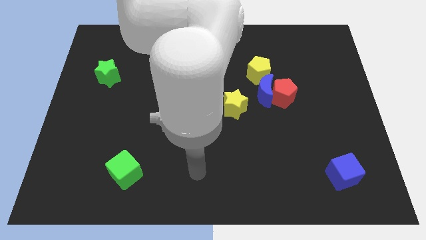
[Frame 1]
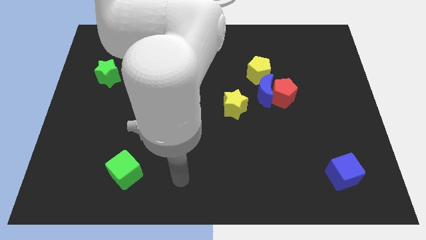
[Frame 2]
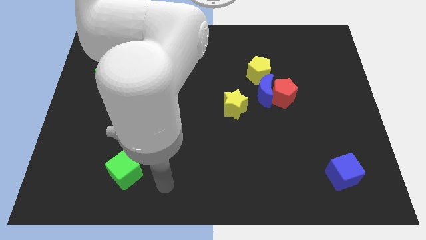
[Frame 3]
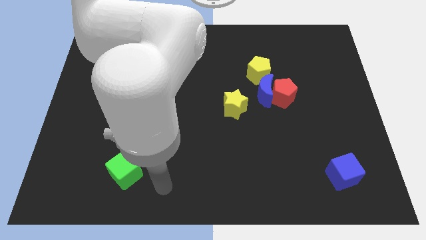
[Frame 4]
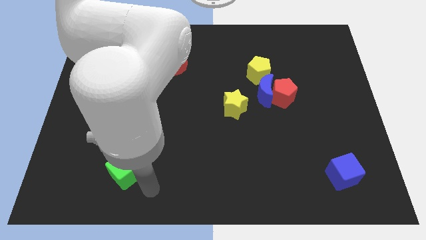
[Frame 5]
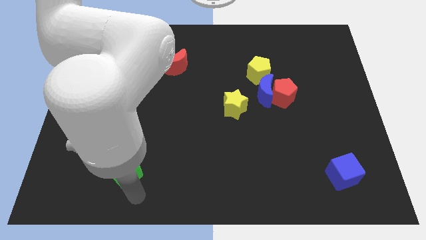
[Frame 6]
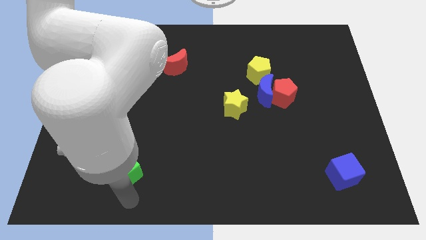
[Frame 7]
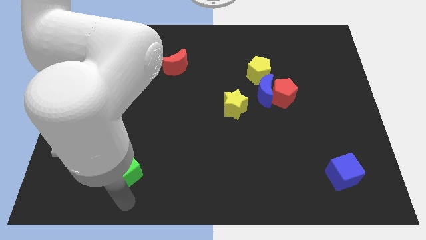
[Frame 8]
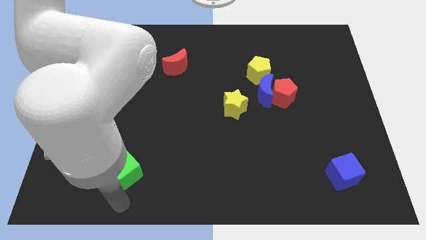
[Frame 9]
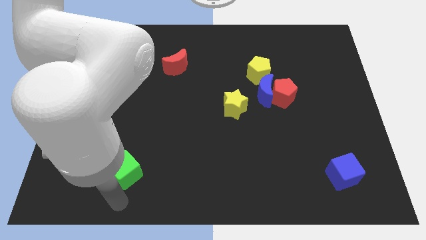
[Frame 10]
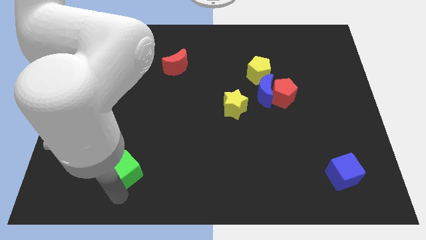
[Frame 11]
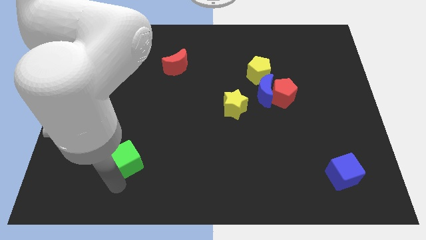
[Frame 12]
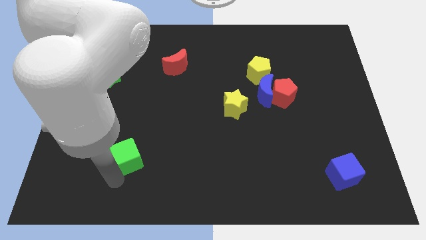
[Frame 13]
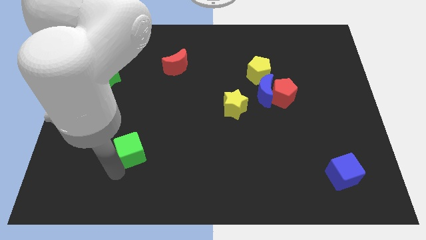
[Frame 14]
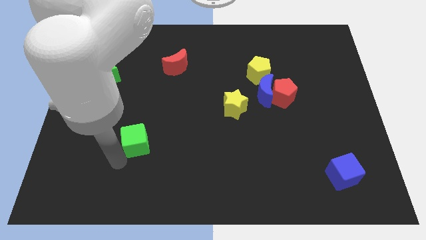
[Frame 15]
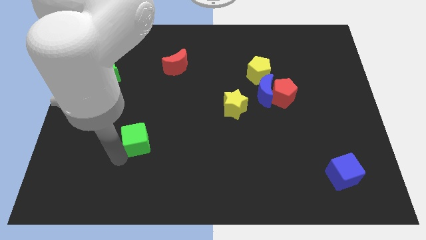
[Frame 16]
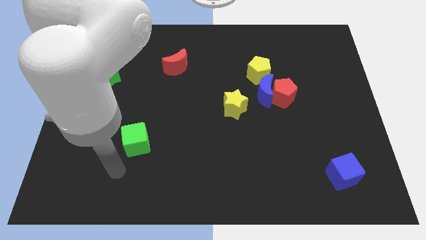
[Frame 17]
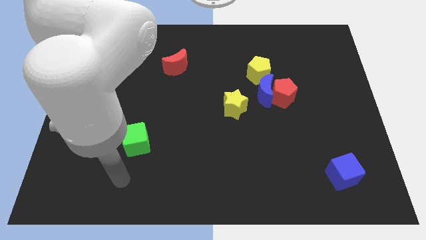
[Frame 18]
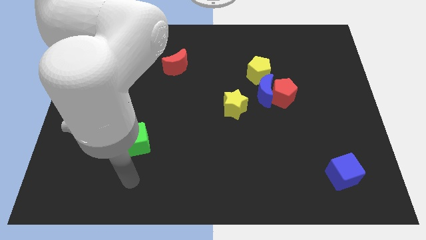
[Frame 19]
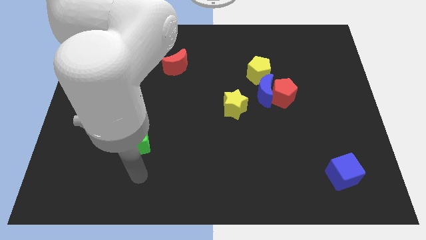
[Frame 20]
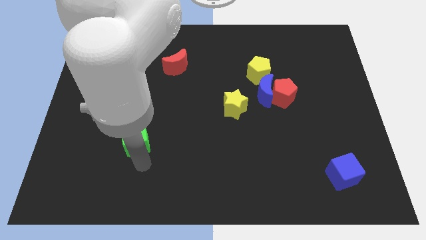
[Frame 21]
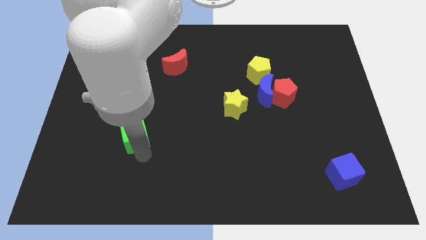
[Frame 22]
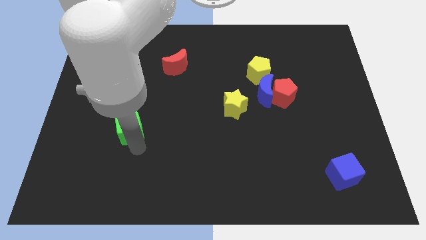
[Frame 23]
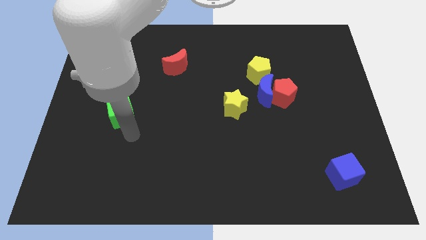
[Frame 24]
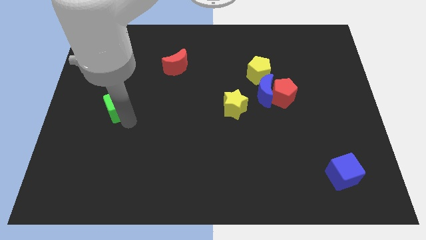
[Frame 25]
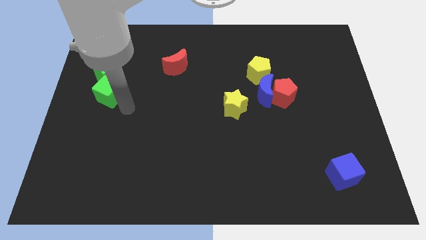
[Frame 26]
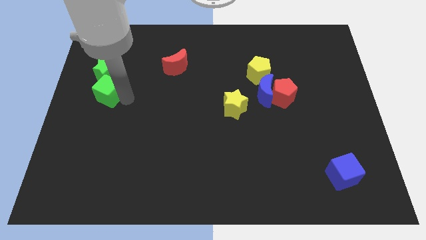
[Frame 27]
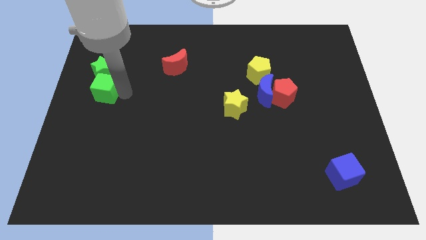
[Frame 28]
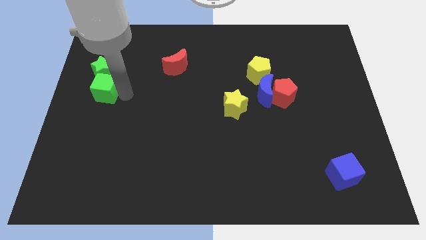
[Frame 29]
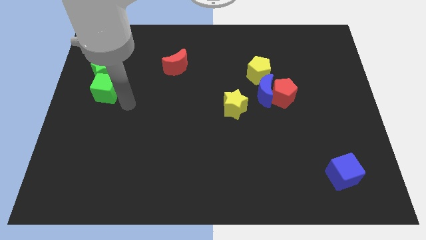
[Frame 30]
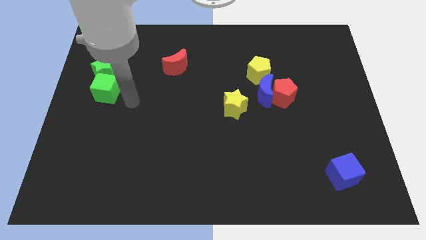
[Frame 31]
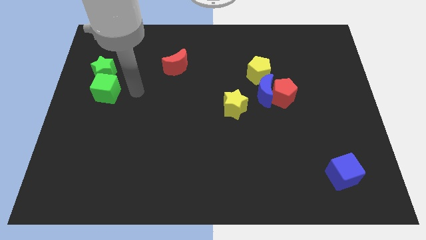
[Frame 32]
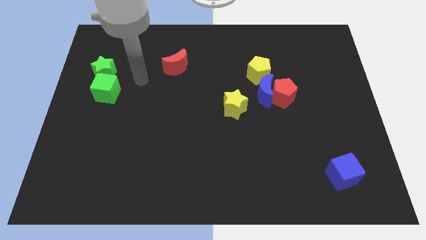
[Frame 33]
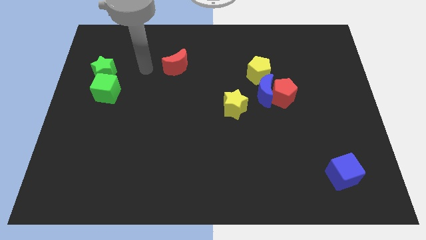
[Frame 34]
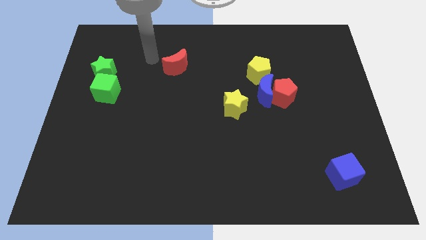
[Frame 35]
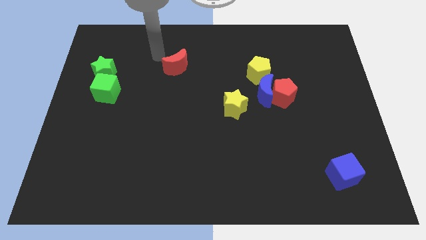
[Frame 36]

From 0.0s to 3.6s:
place the green cube below the green star

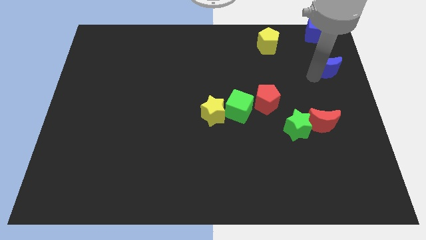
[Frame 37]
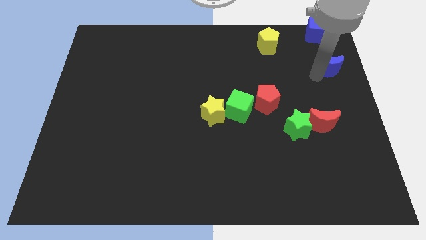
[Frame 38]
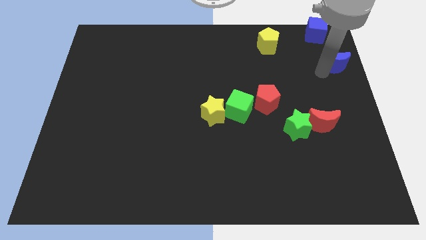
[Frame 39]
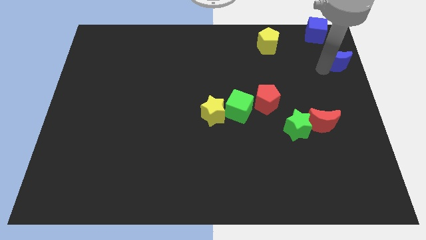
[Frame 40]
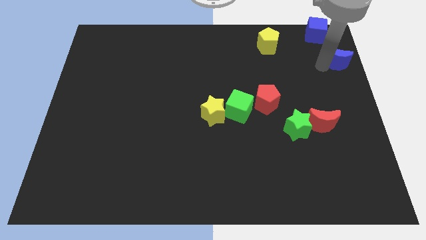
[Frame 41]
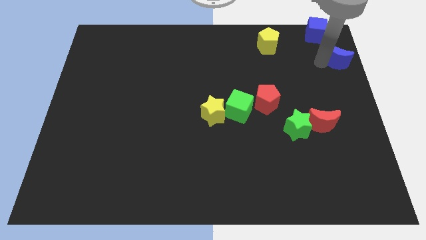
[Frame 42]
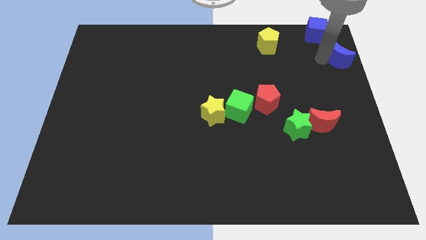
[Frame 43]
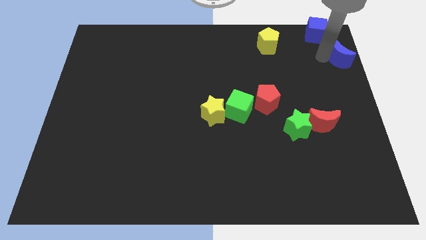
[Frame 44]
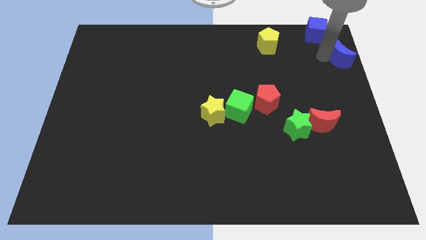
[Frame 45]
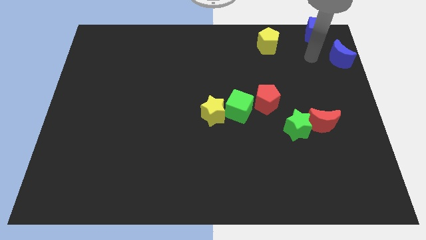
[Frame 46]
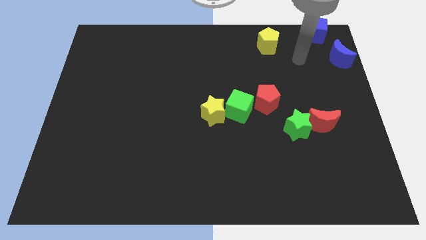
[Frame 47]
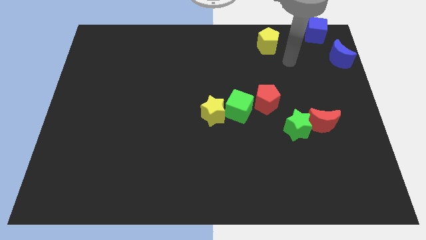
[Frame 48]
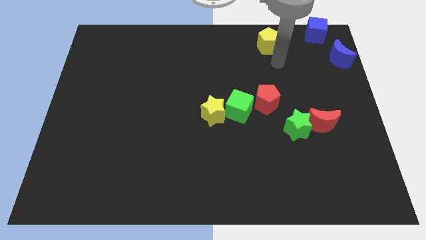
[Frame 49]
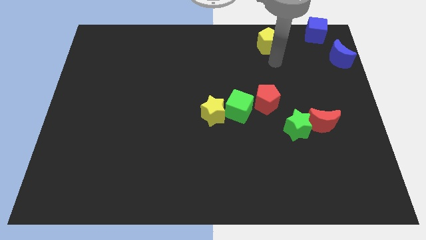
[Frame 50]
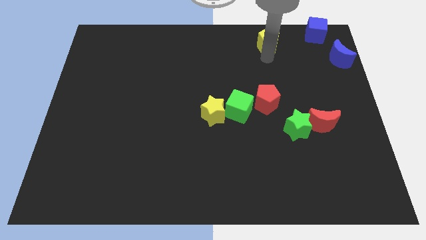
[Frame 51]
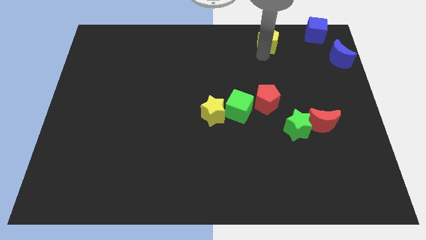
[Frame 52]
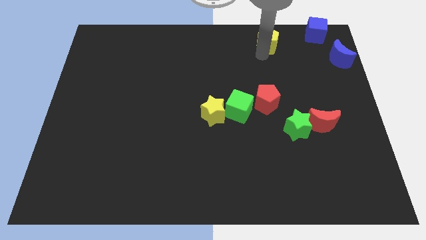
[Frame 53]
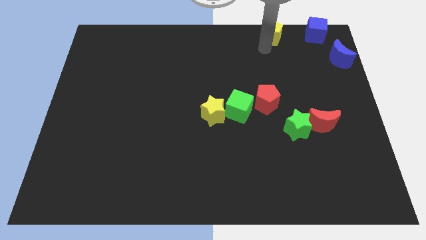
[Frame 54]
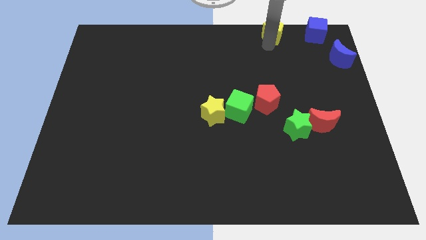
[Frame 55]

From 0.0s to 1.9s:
move the blue crescent towards the top right of the board

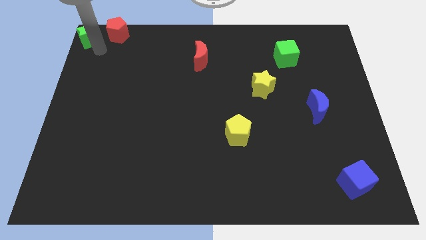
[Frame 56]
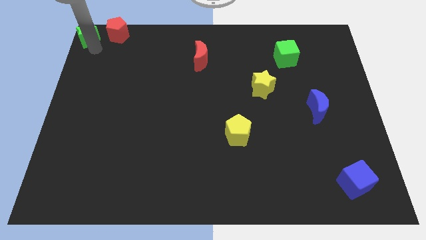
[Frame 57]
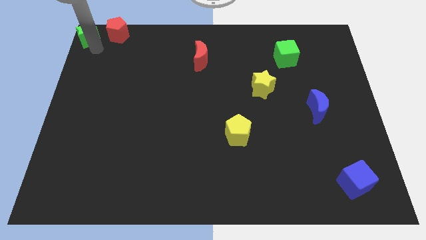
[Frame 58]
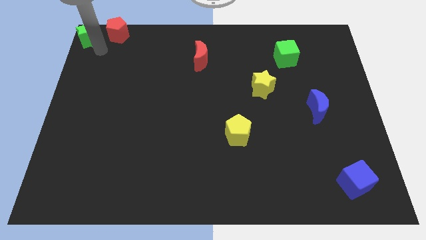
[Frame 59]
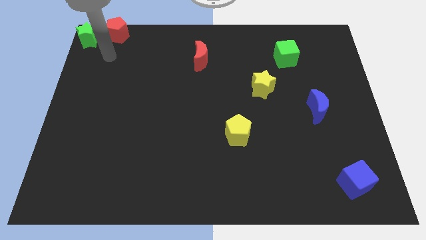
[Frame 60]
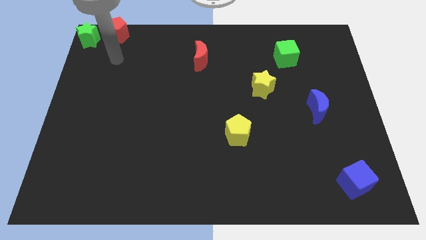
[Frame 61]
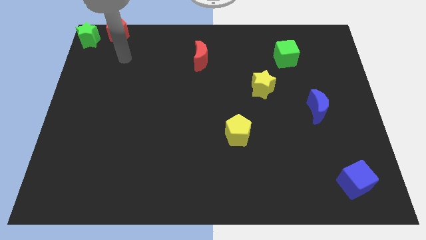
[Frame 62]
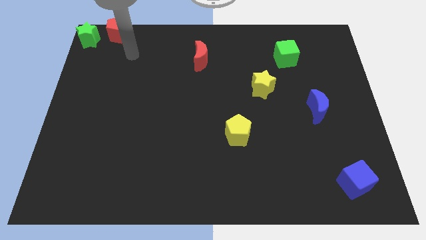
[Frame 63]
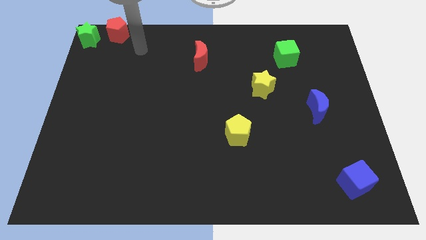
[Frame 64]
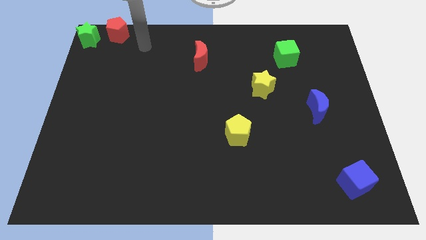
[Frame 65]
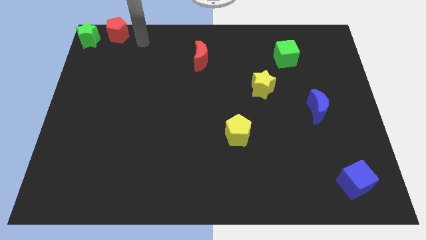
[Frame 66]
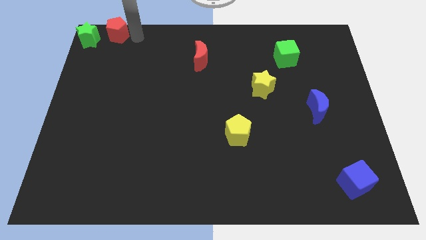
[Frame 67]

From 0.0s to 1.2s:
place the green star towards the top left corner of the board

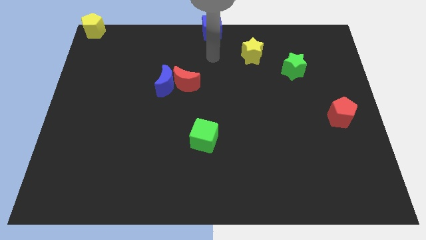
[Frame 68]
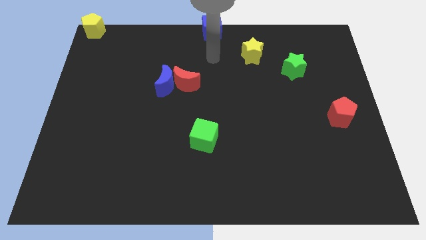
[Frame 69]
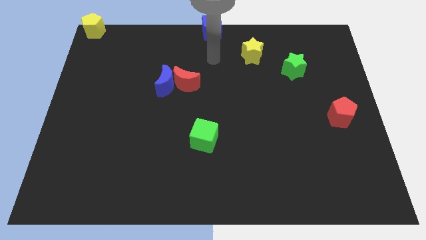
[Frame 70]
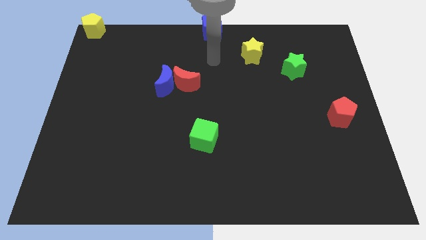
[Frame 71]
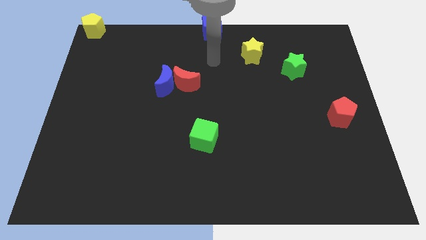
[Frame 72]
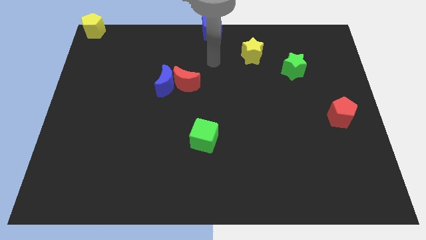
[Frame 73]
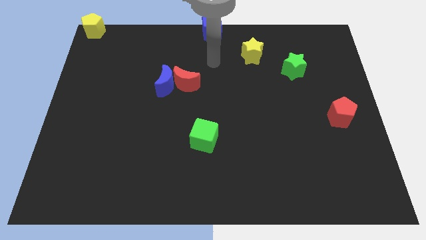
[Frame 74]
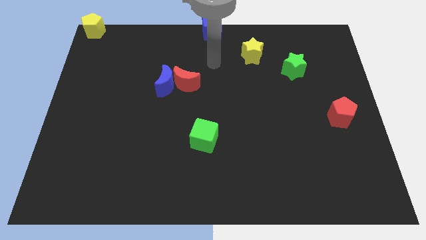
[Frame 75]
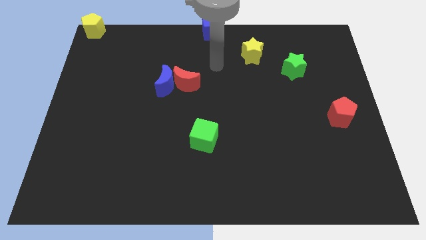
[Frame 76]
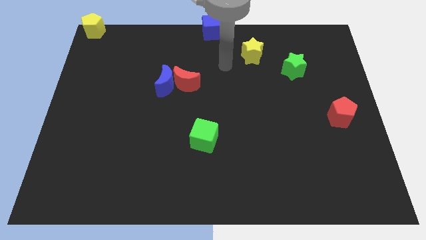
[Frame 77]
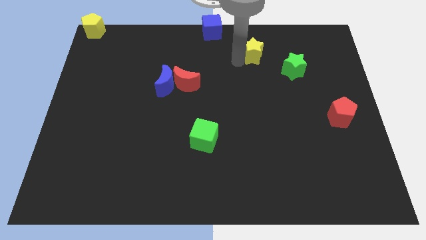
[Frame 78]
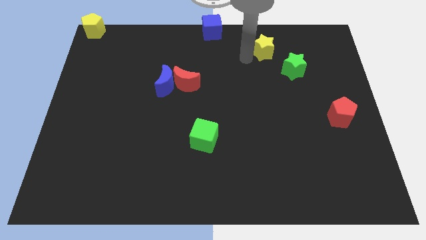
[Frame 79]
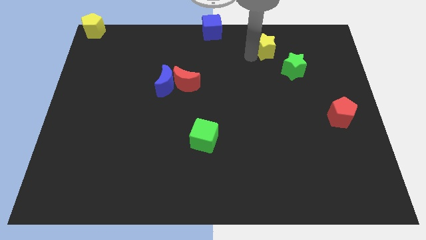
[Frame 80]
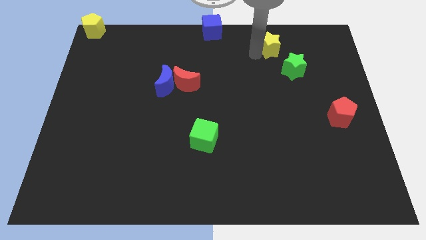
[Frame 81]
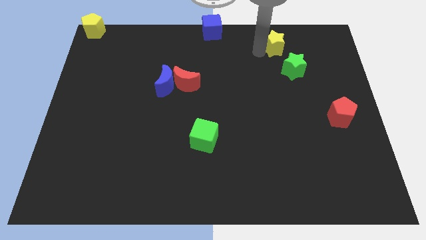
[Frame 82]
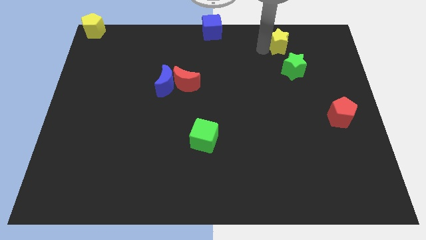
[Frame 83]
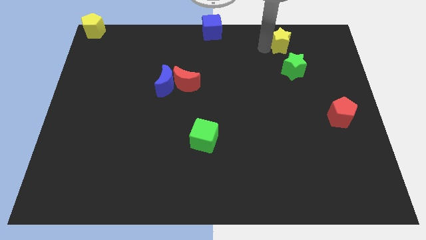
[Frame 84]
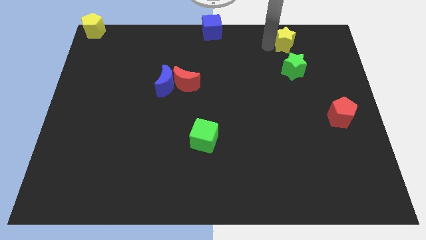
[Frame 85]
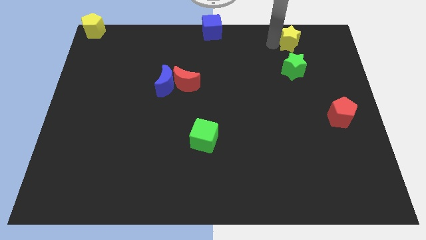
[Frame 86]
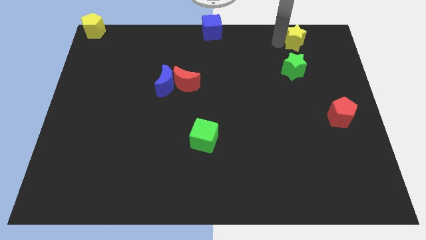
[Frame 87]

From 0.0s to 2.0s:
move the yellow star vertically above the green star

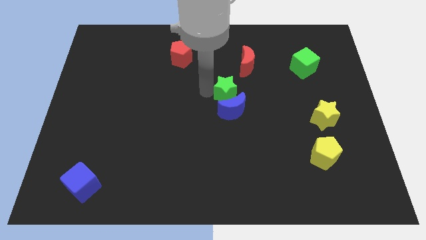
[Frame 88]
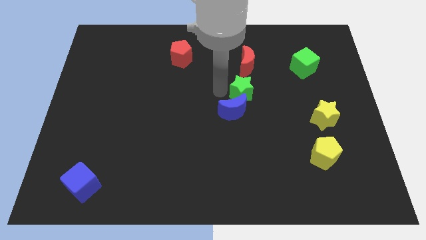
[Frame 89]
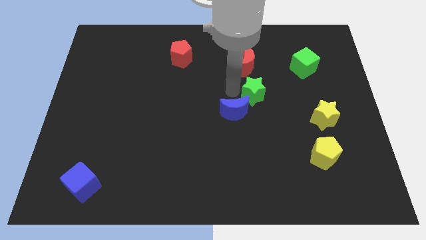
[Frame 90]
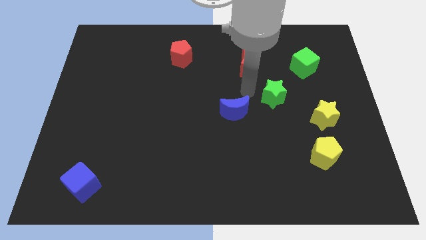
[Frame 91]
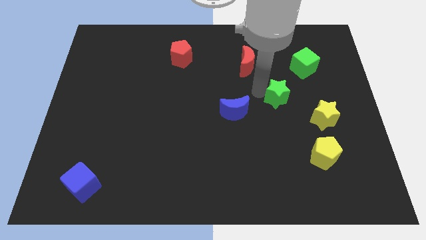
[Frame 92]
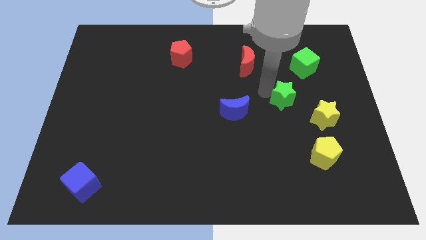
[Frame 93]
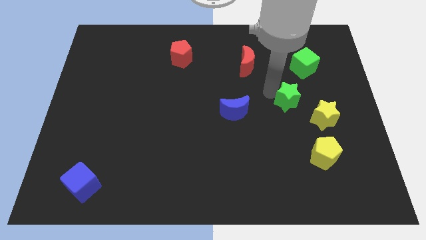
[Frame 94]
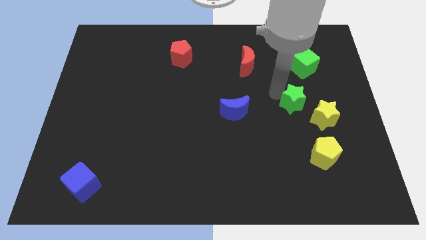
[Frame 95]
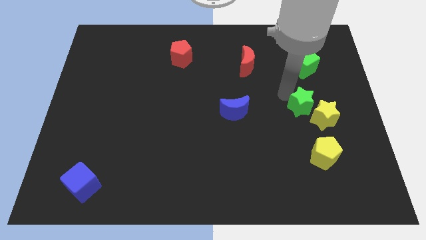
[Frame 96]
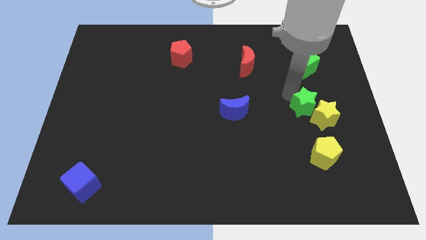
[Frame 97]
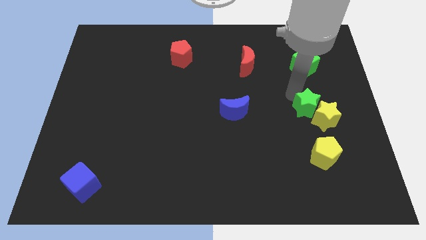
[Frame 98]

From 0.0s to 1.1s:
push the green star into the yellow star
